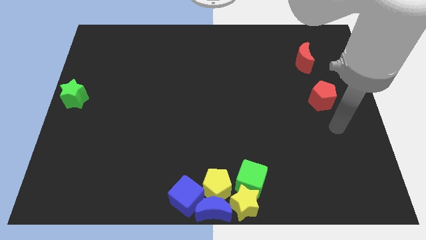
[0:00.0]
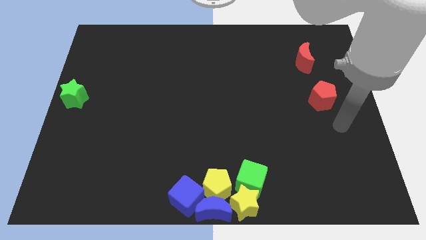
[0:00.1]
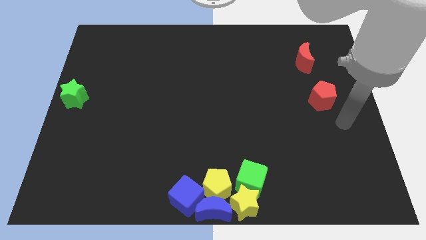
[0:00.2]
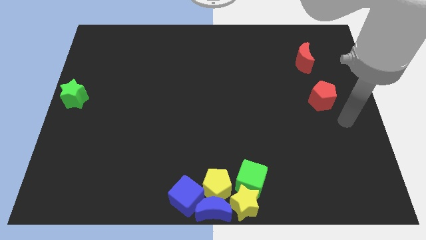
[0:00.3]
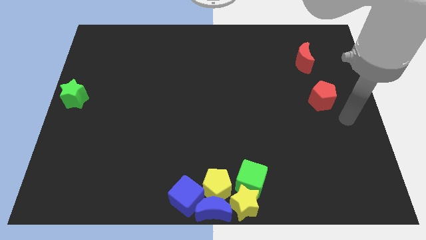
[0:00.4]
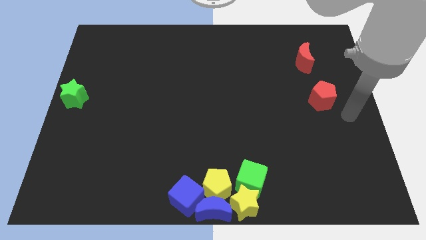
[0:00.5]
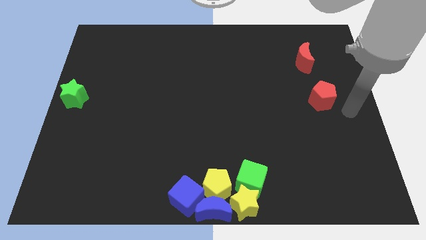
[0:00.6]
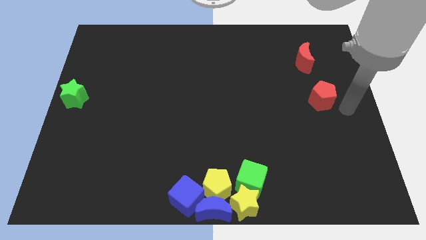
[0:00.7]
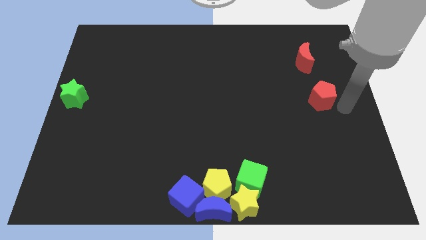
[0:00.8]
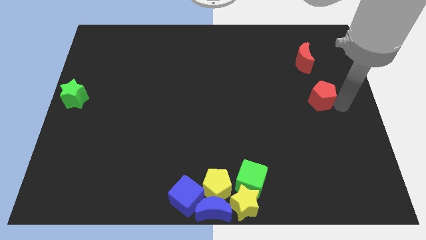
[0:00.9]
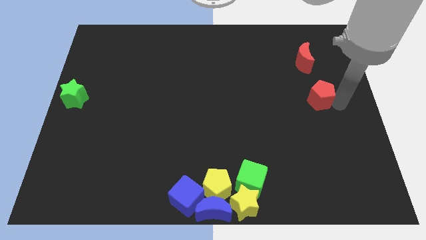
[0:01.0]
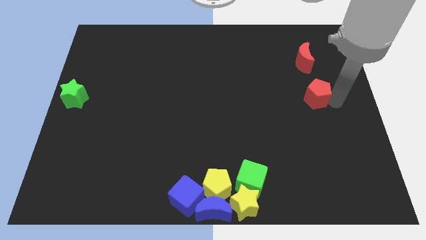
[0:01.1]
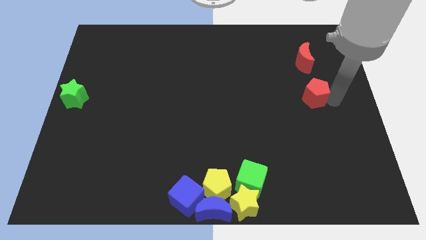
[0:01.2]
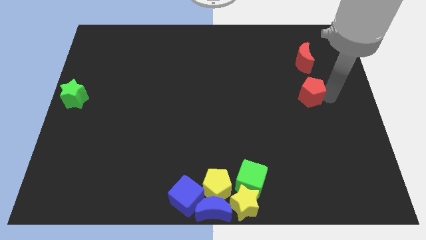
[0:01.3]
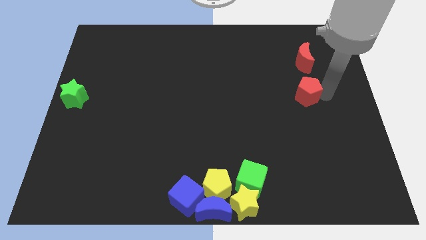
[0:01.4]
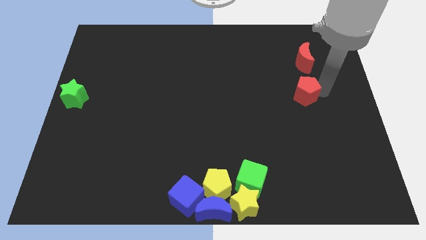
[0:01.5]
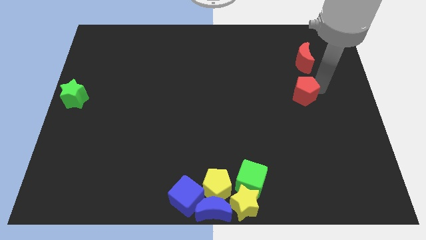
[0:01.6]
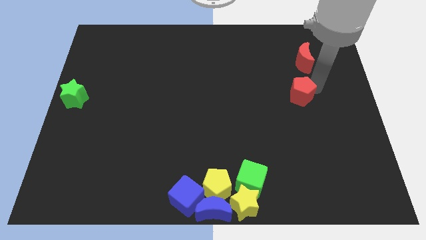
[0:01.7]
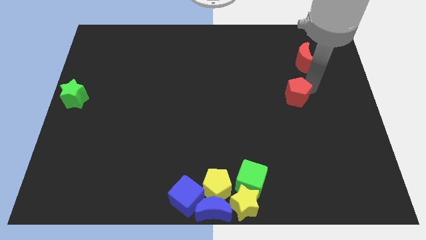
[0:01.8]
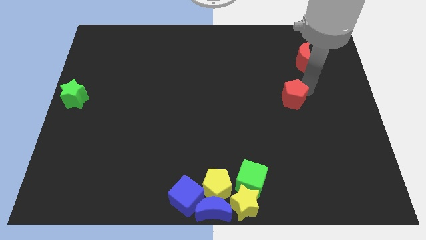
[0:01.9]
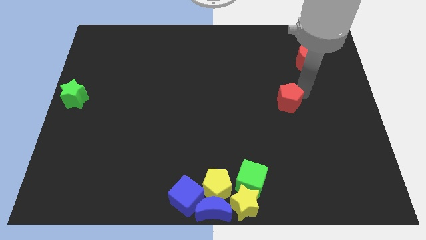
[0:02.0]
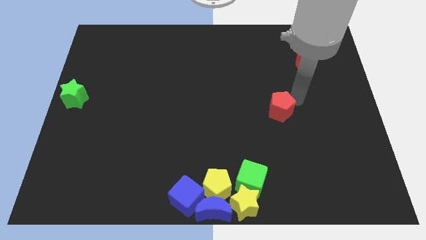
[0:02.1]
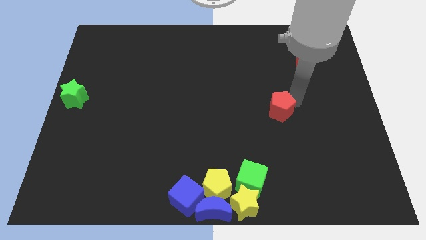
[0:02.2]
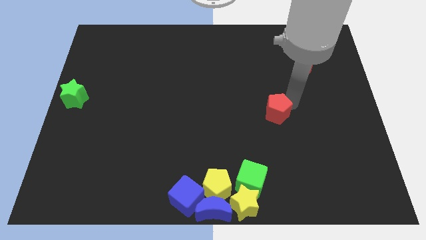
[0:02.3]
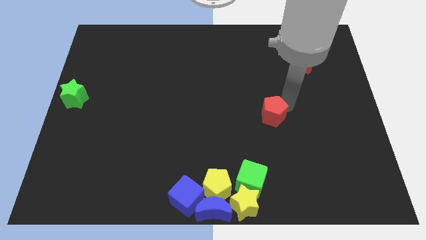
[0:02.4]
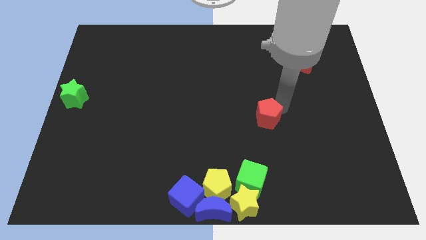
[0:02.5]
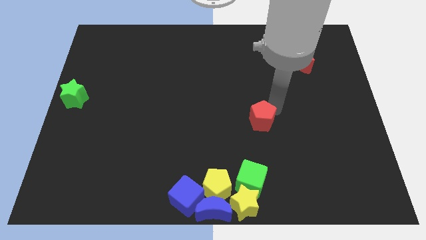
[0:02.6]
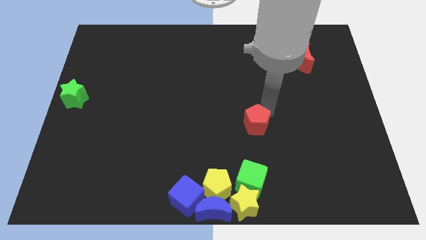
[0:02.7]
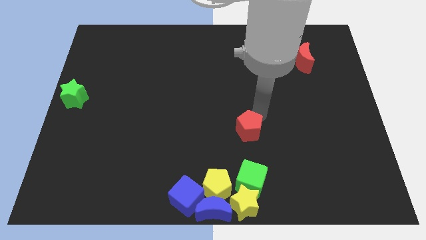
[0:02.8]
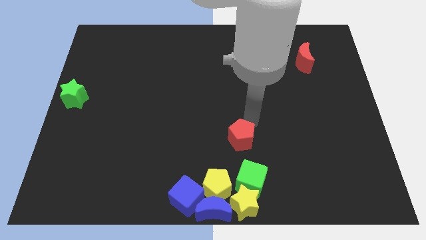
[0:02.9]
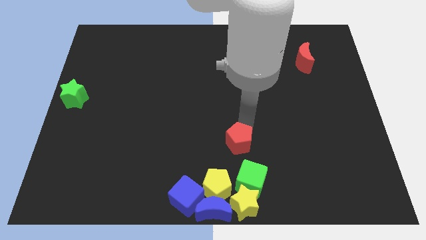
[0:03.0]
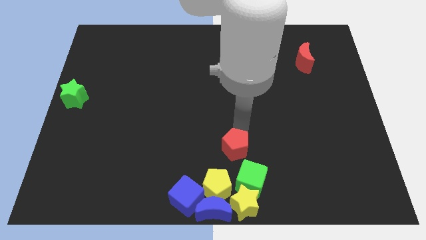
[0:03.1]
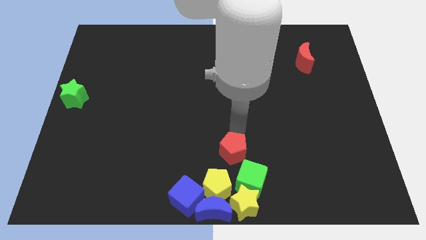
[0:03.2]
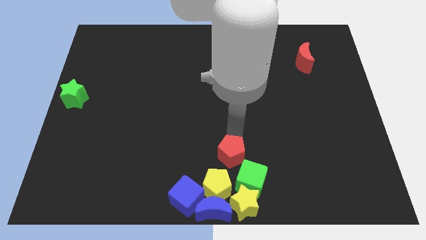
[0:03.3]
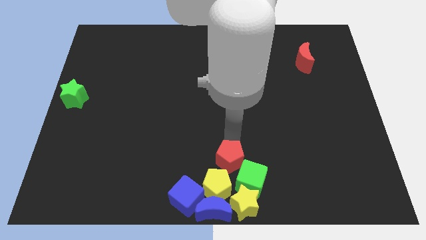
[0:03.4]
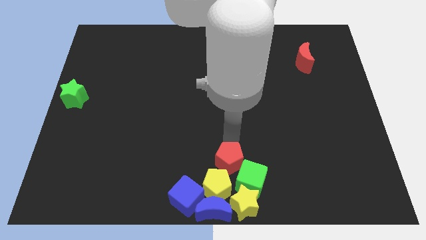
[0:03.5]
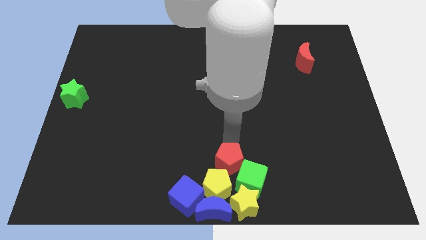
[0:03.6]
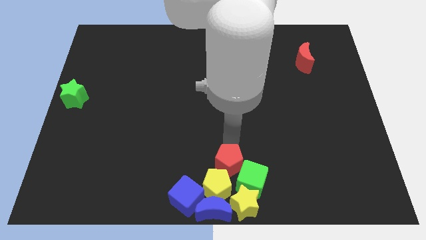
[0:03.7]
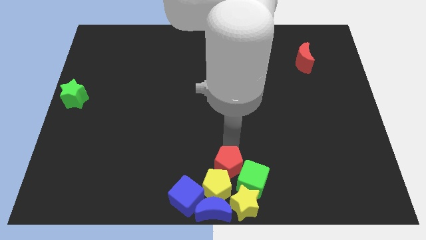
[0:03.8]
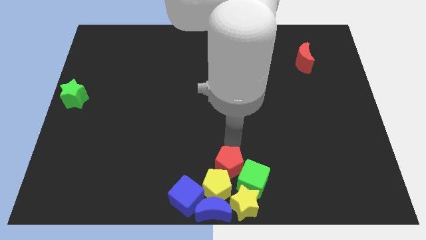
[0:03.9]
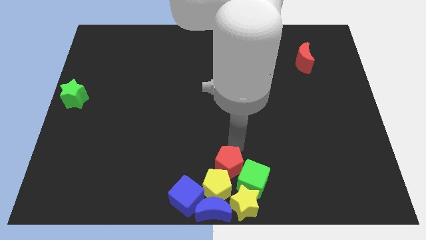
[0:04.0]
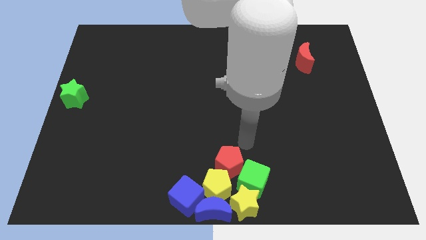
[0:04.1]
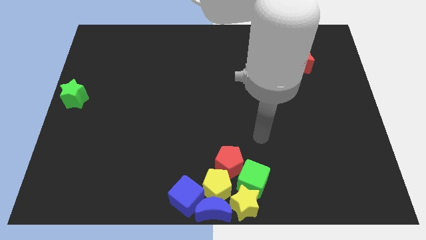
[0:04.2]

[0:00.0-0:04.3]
move the red pentagon into the yellow pentagon

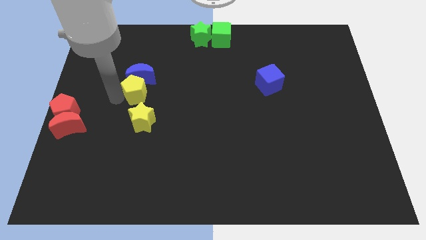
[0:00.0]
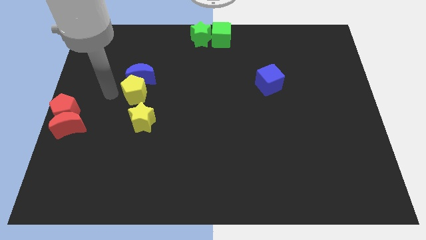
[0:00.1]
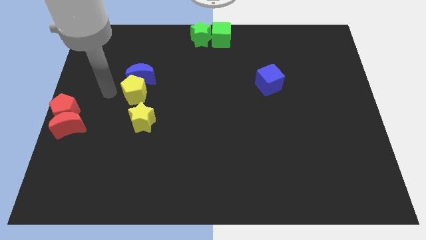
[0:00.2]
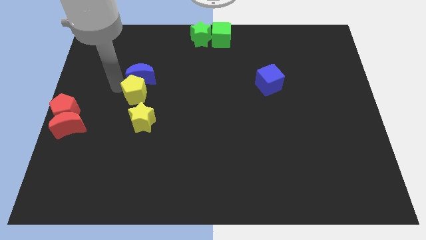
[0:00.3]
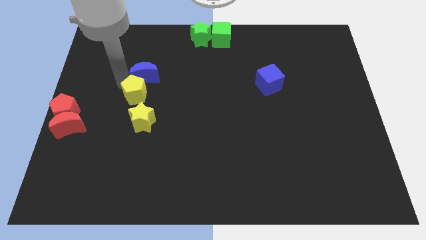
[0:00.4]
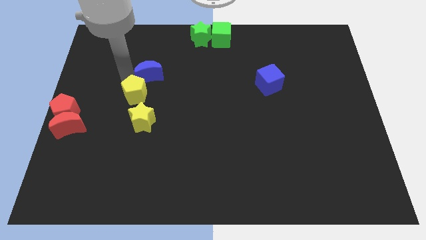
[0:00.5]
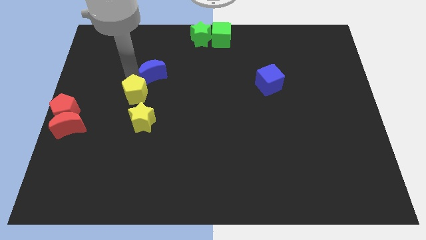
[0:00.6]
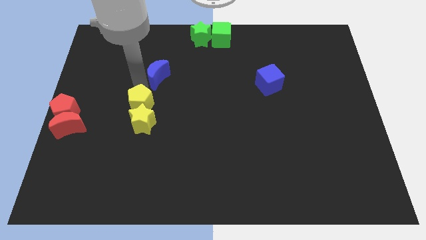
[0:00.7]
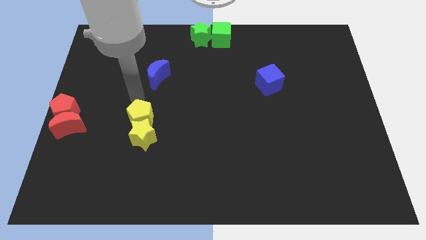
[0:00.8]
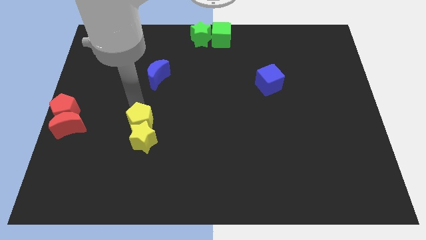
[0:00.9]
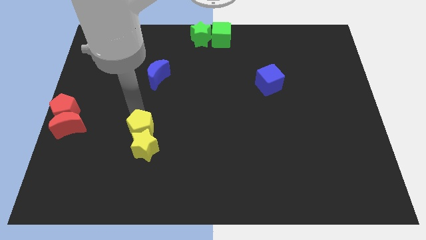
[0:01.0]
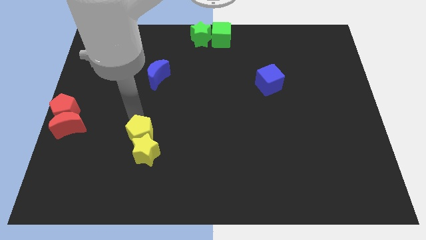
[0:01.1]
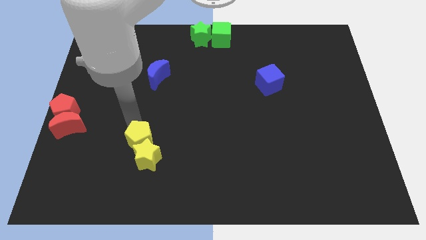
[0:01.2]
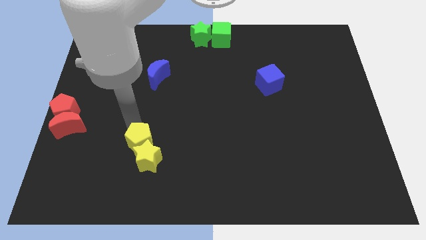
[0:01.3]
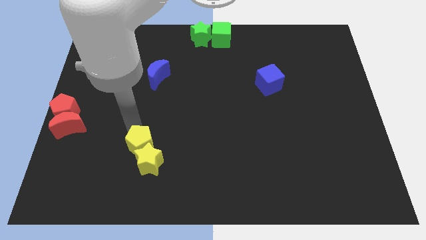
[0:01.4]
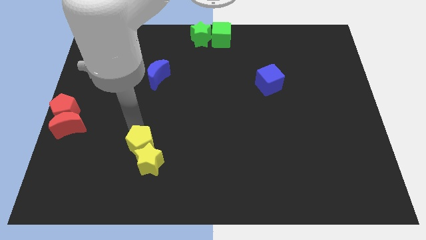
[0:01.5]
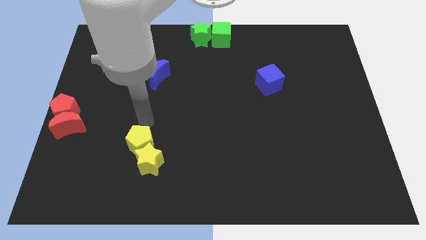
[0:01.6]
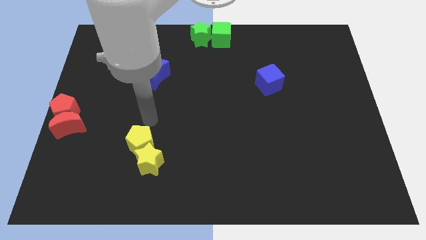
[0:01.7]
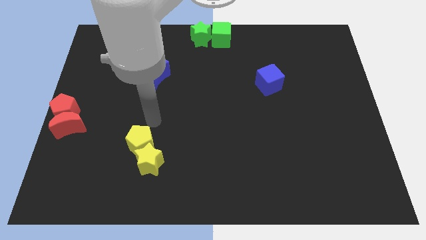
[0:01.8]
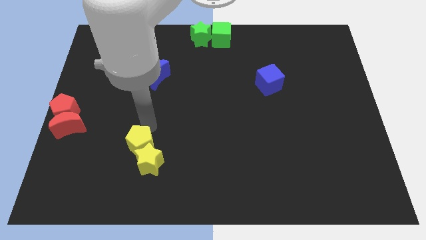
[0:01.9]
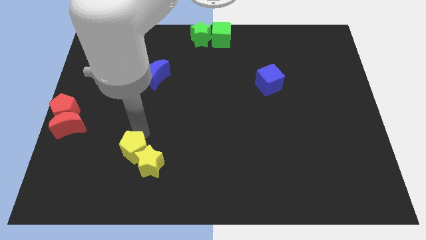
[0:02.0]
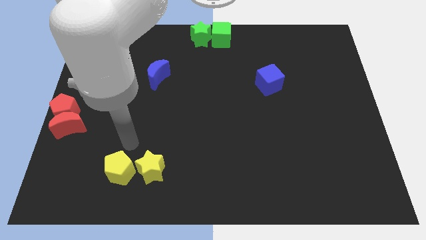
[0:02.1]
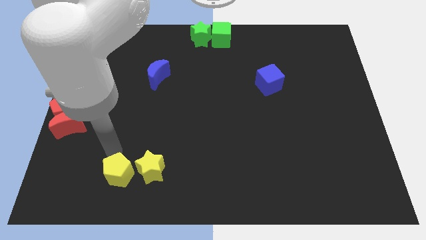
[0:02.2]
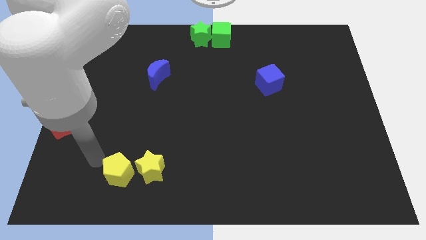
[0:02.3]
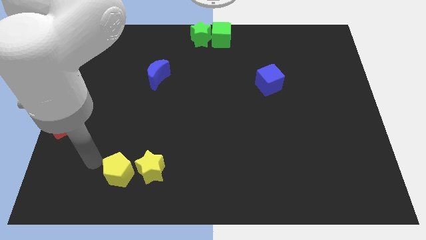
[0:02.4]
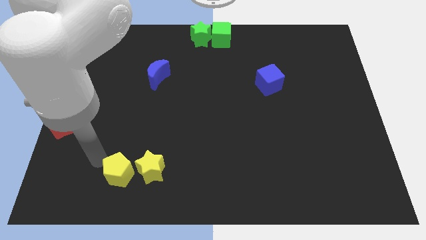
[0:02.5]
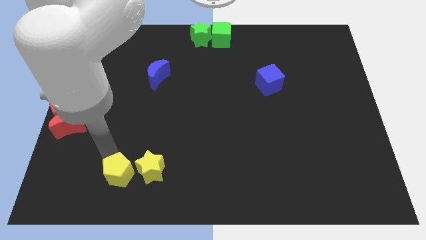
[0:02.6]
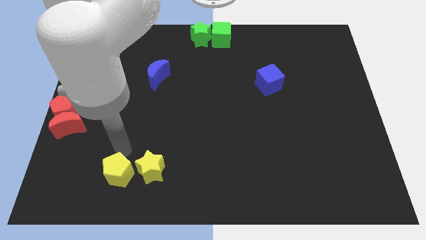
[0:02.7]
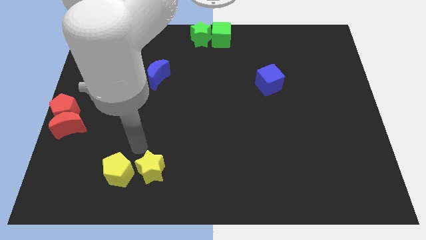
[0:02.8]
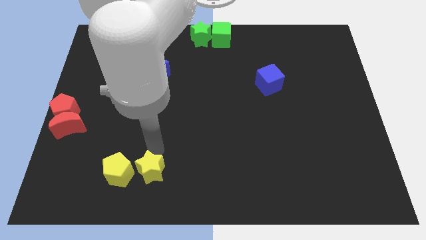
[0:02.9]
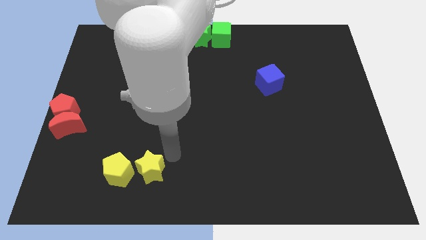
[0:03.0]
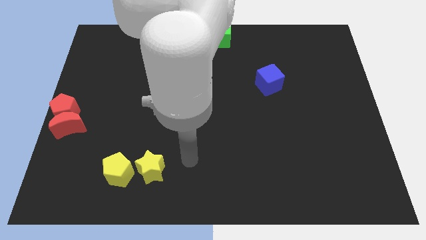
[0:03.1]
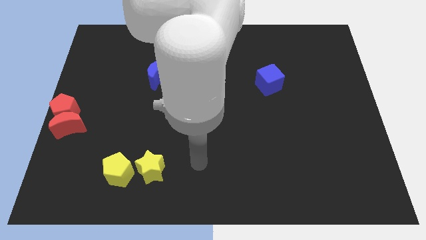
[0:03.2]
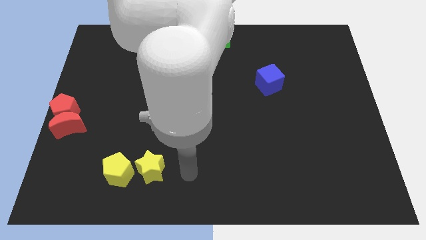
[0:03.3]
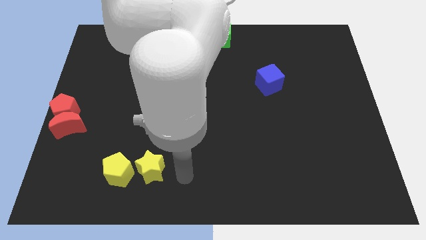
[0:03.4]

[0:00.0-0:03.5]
place the yellow pentagon to the left of the yellow star

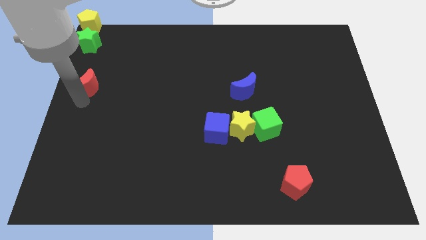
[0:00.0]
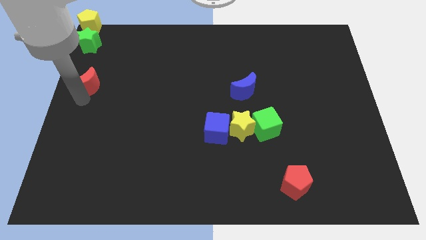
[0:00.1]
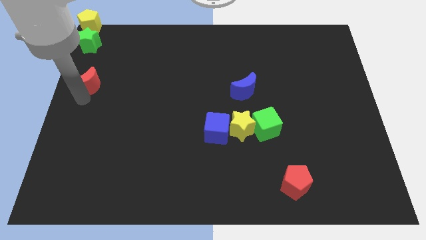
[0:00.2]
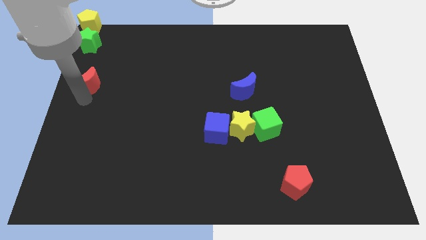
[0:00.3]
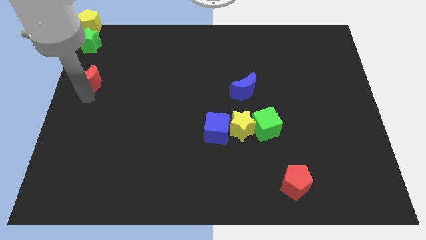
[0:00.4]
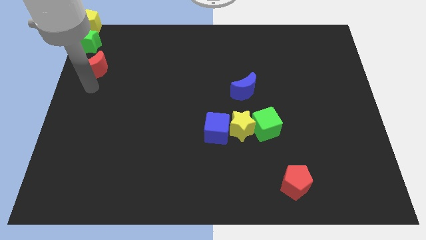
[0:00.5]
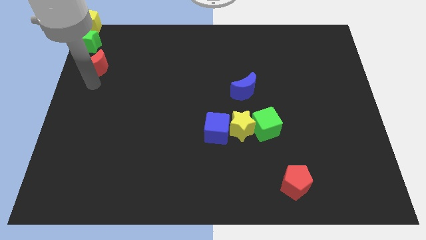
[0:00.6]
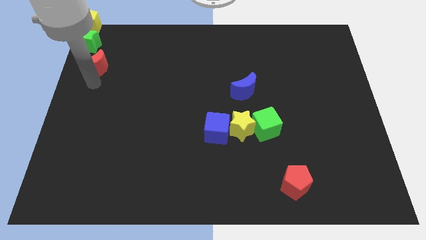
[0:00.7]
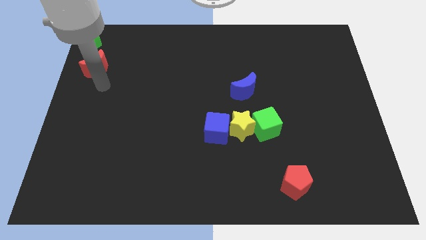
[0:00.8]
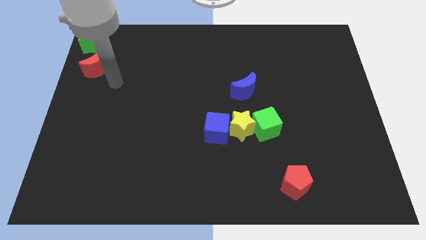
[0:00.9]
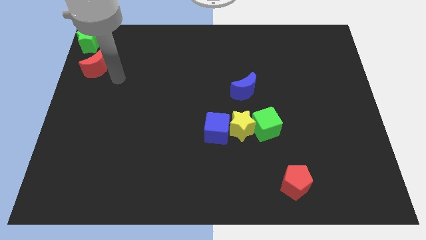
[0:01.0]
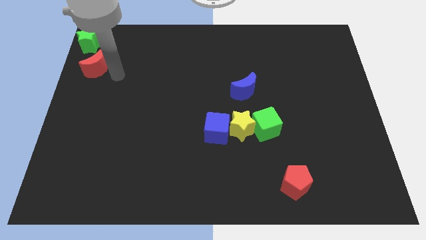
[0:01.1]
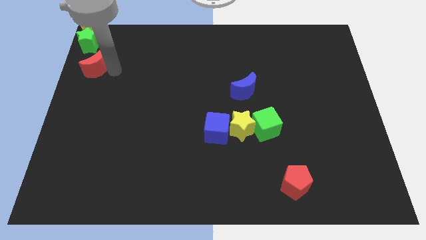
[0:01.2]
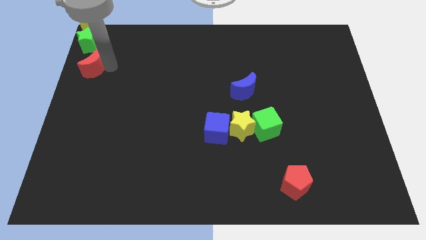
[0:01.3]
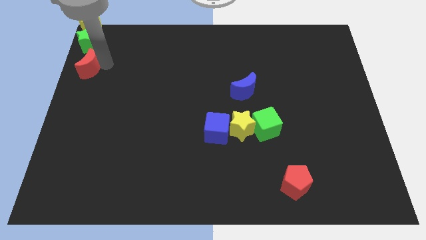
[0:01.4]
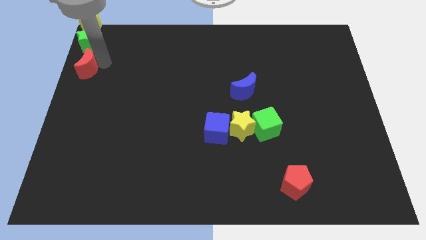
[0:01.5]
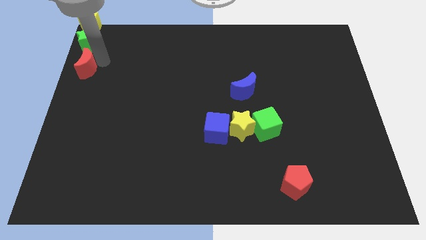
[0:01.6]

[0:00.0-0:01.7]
move the red moon to the bottom side of the green star
